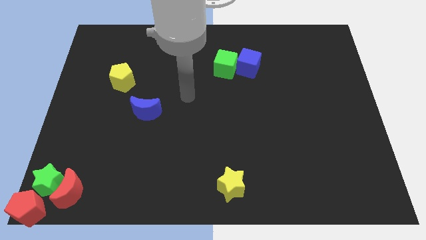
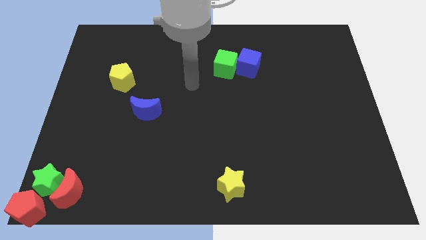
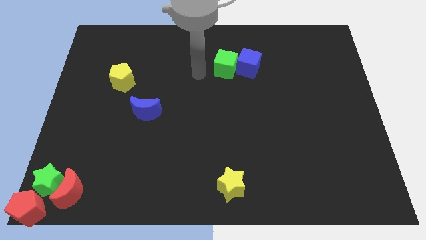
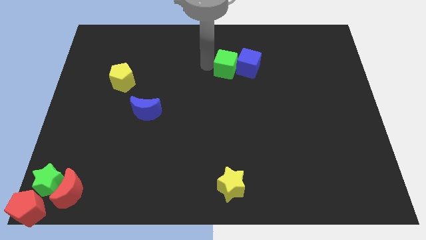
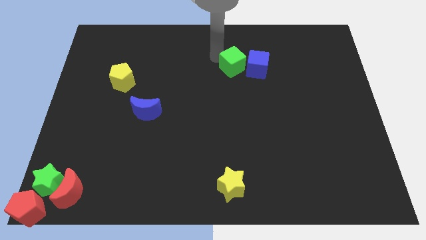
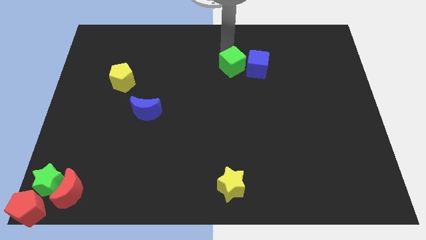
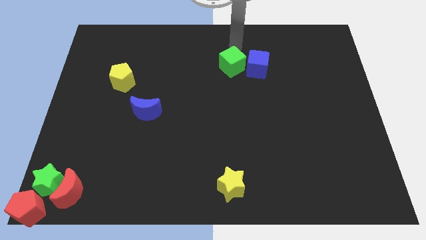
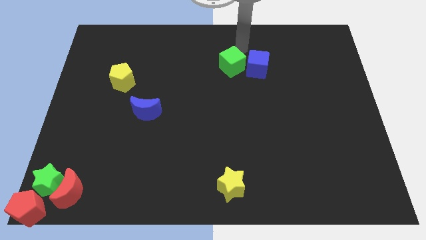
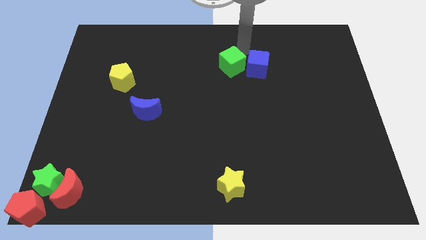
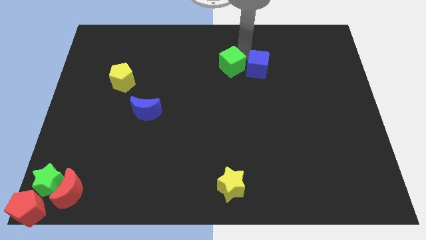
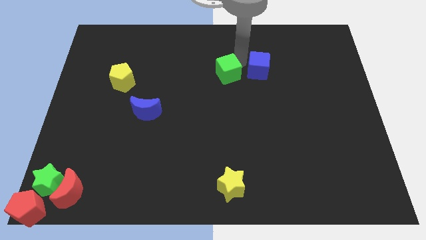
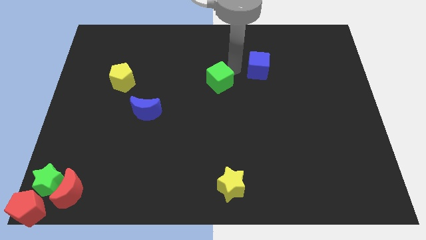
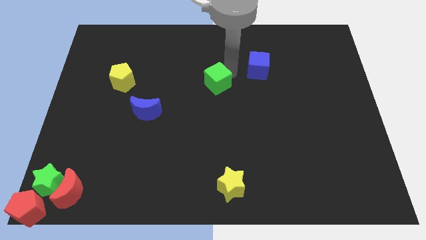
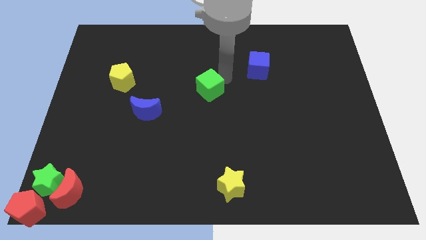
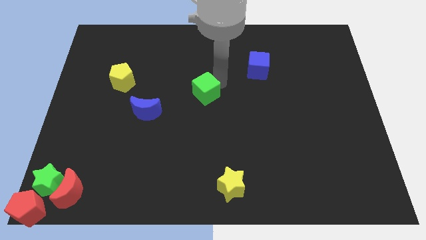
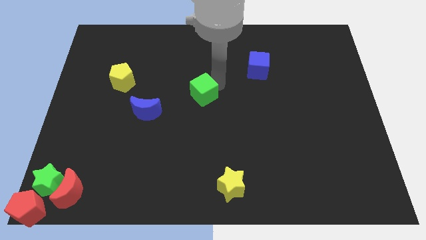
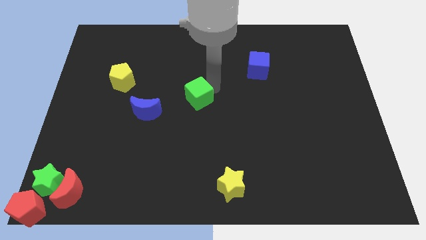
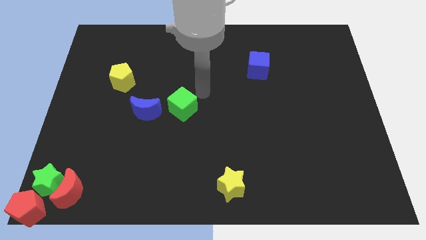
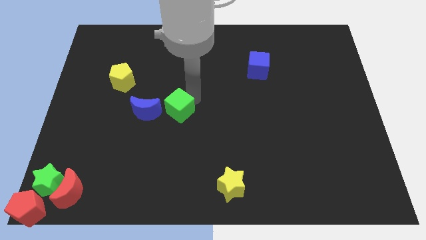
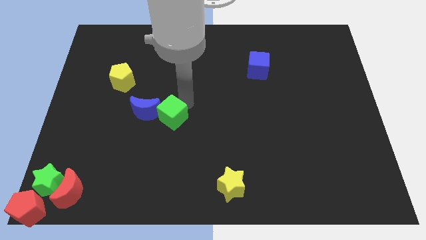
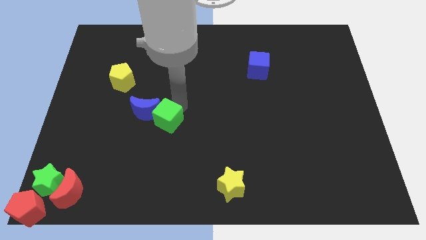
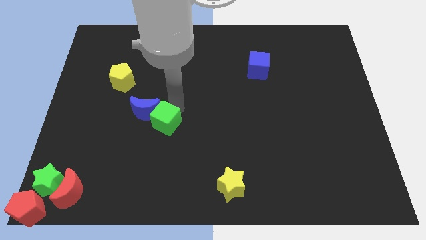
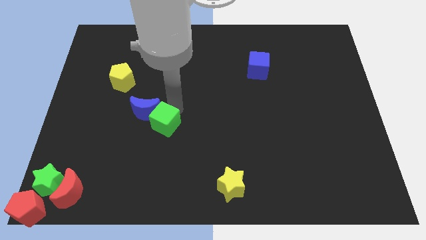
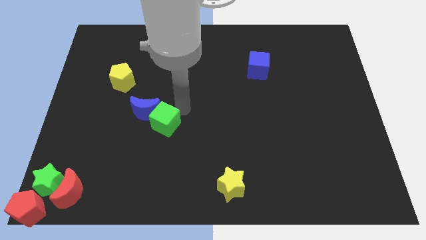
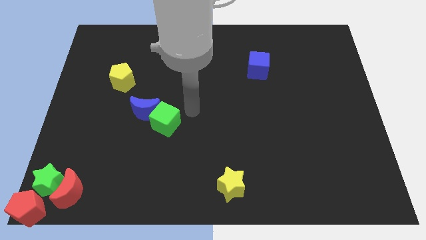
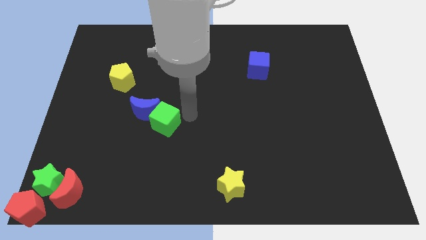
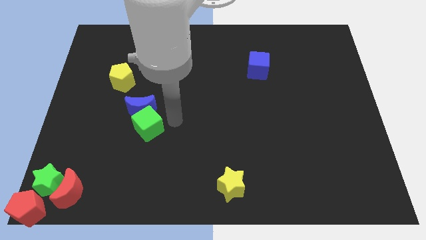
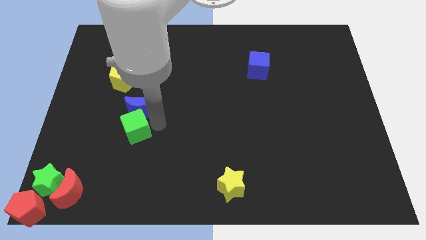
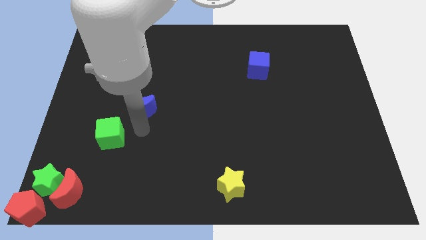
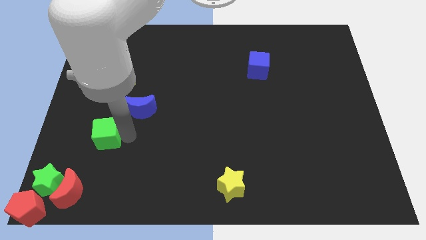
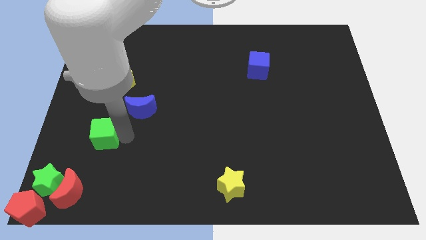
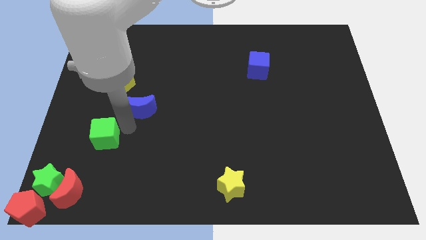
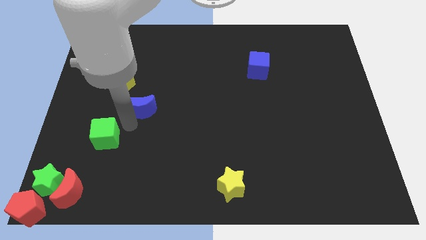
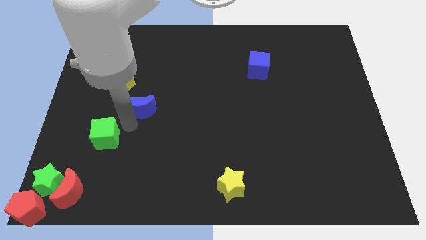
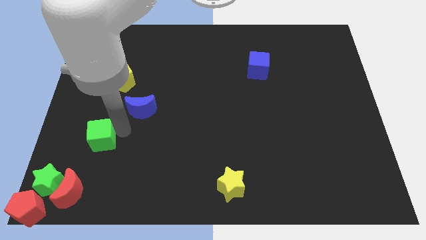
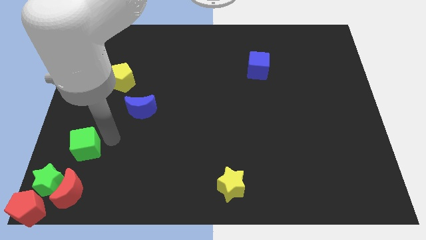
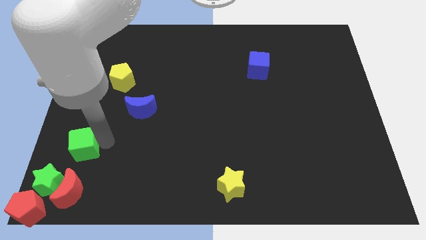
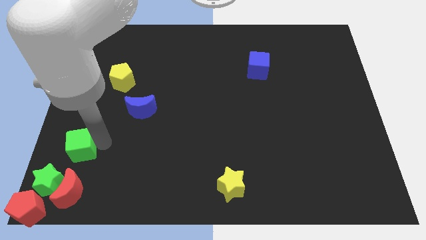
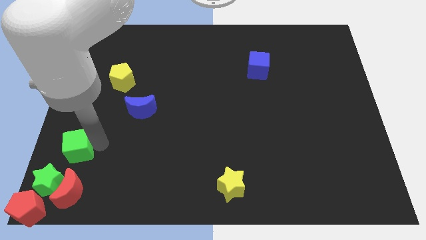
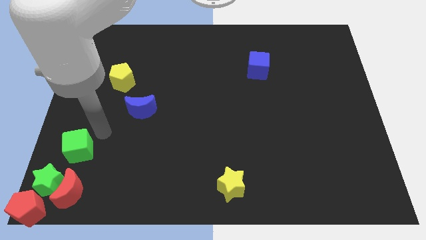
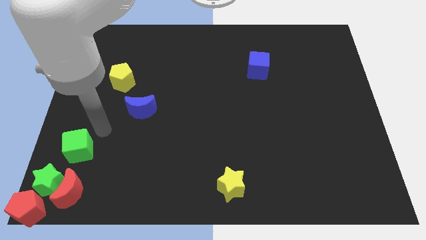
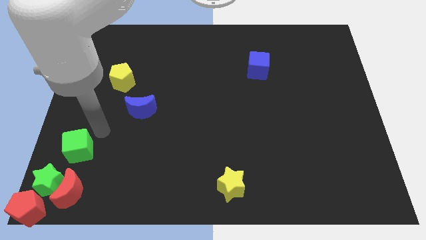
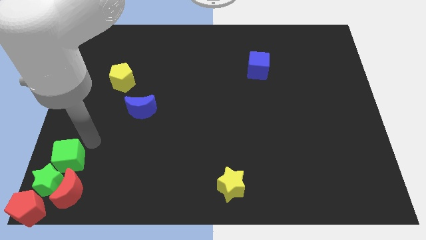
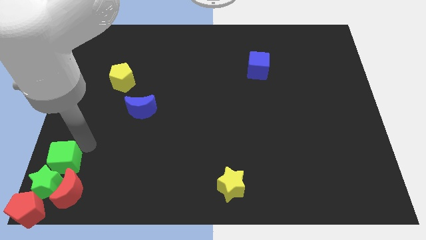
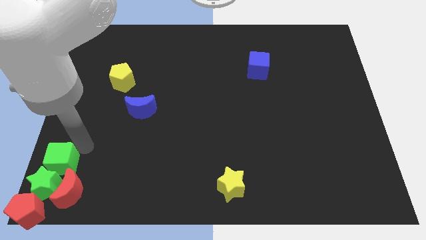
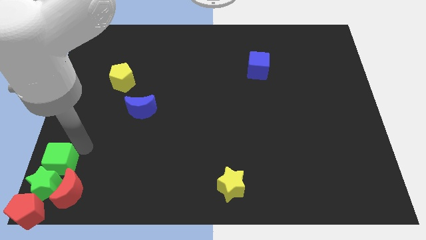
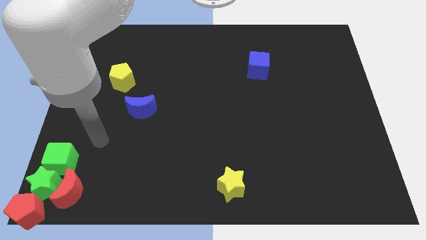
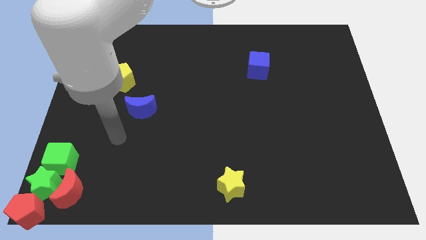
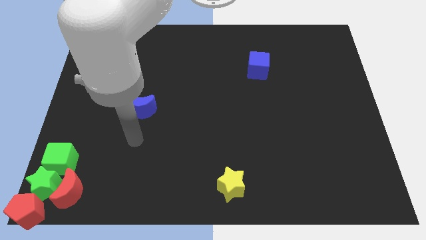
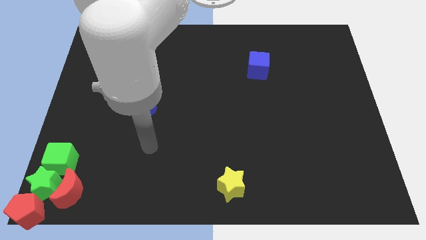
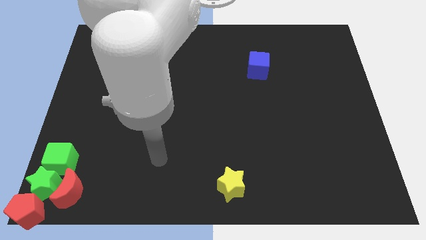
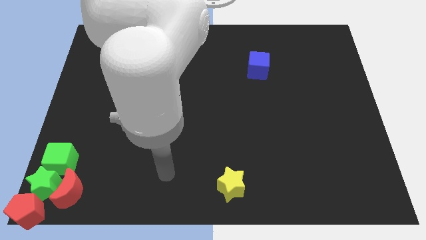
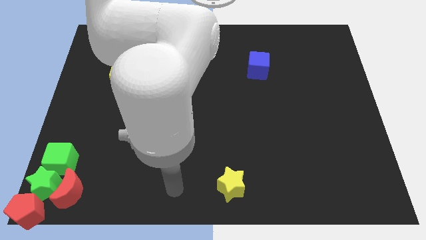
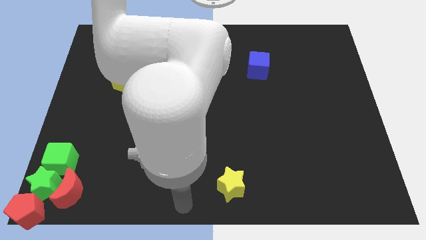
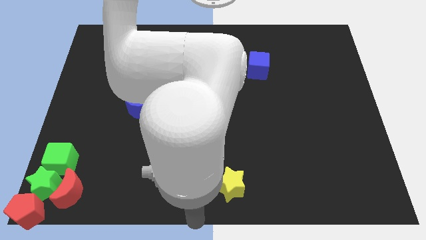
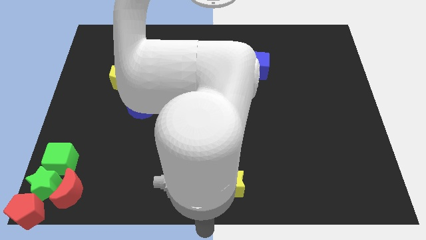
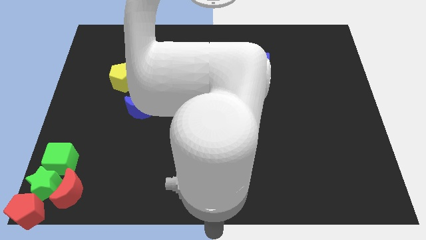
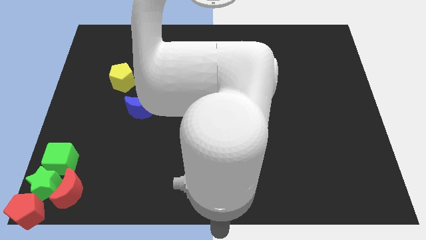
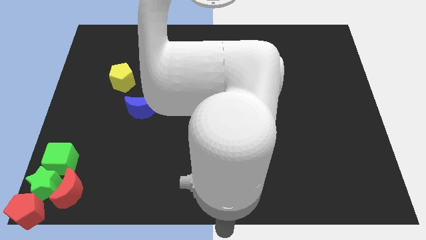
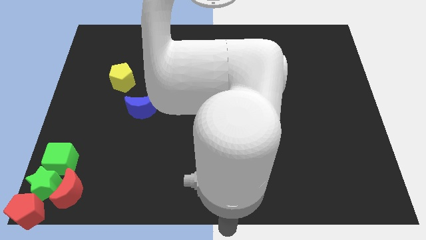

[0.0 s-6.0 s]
move the green cube to the top of the green star

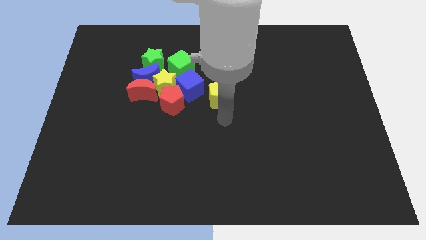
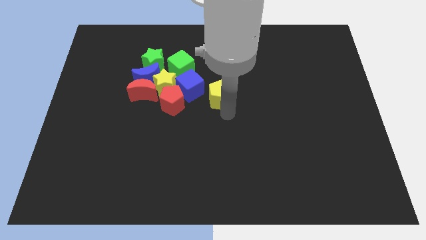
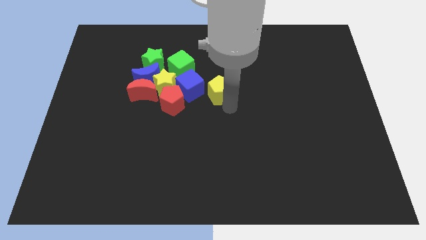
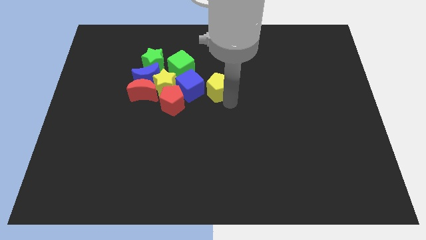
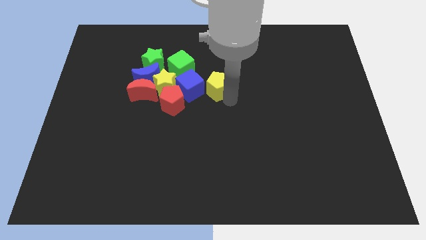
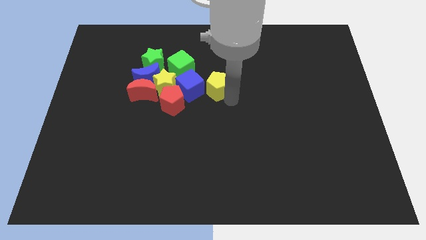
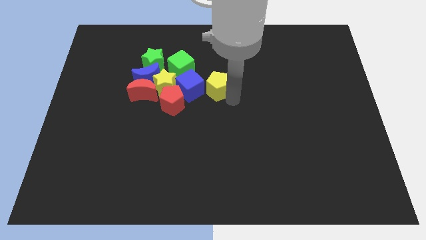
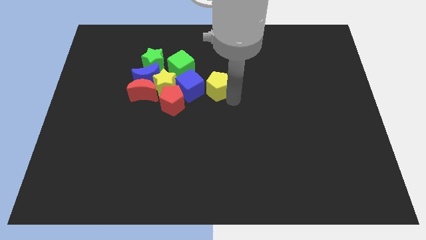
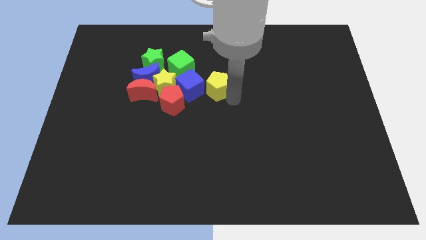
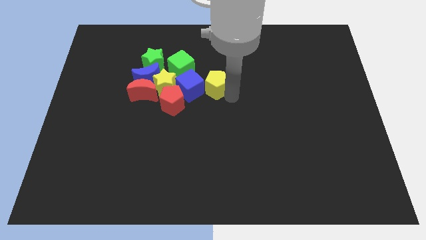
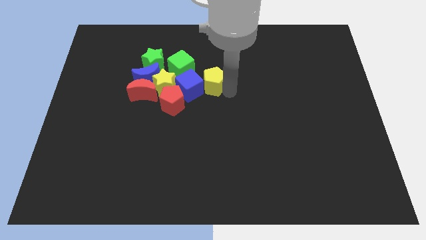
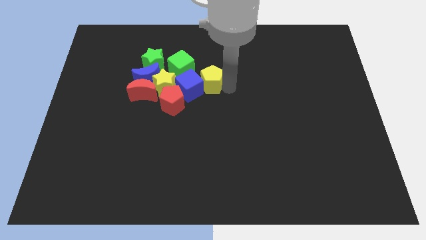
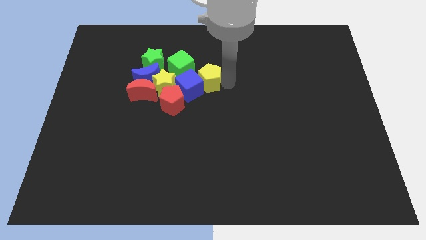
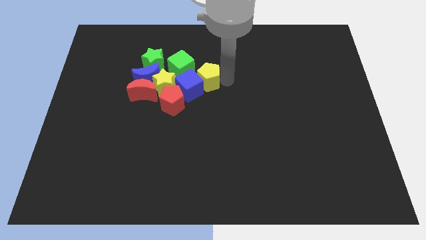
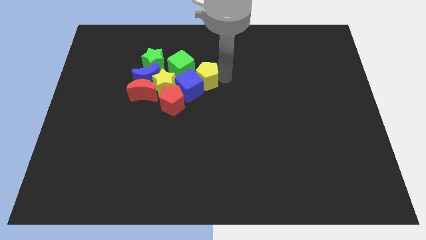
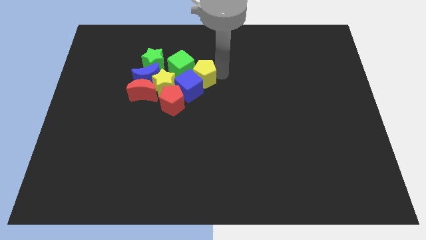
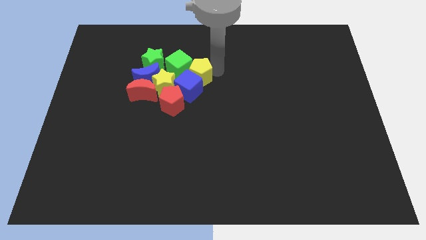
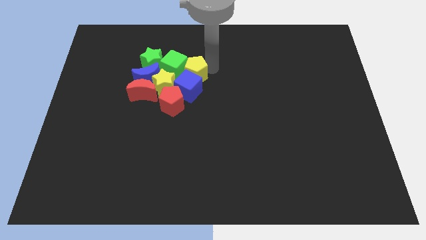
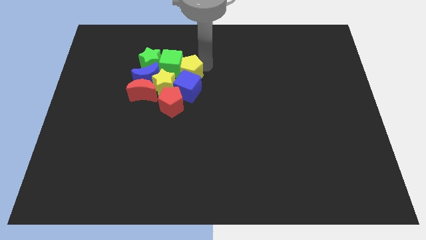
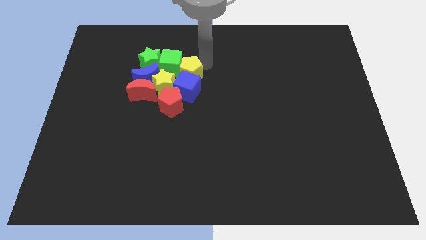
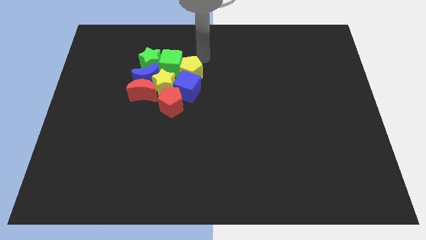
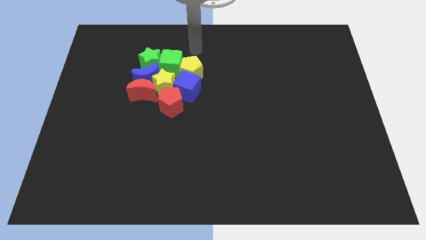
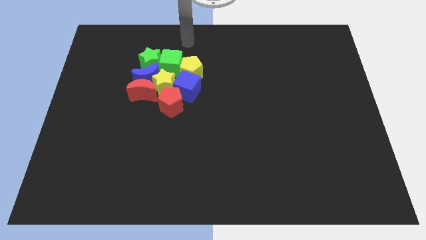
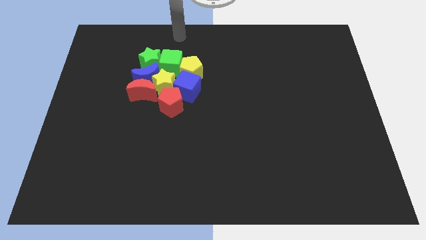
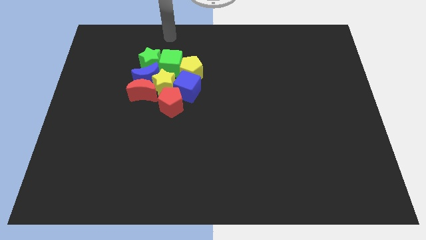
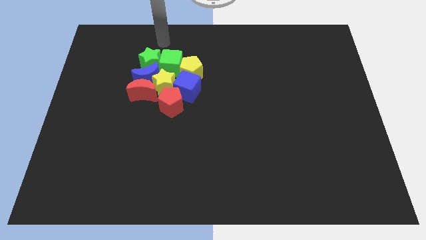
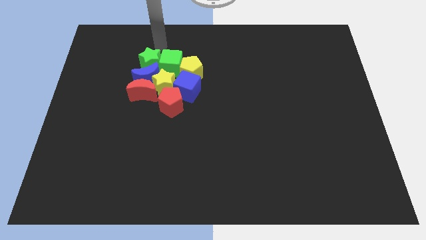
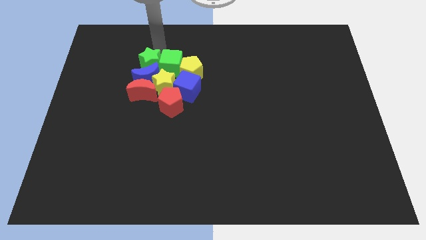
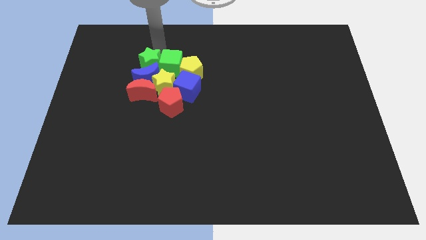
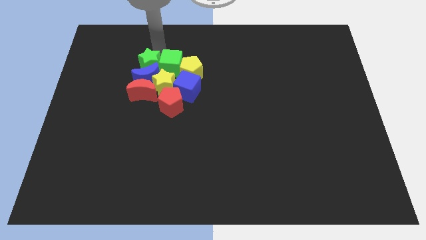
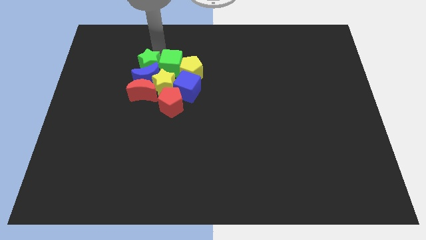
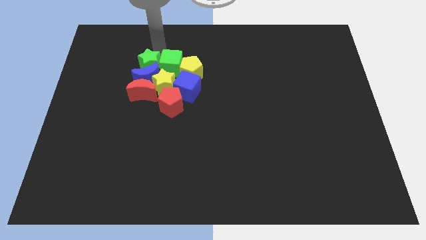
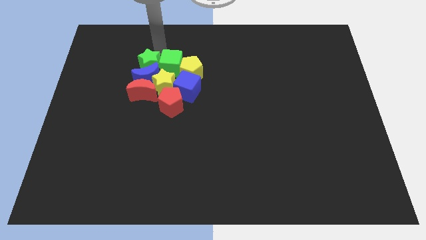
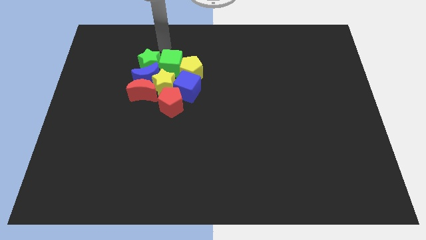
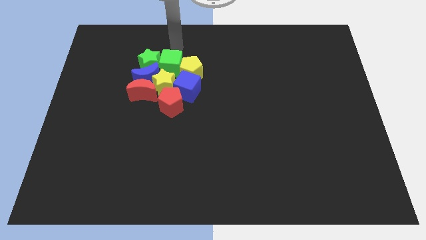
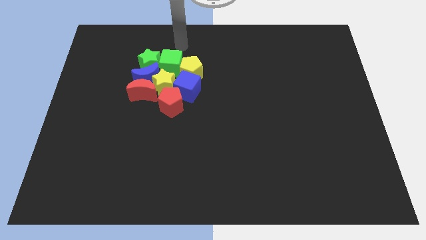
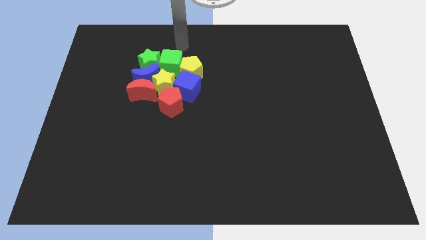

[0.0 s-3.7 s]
move your arm away from the yellow pentagon
